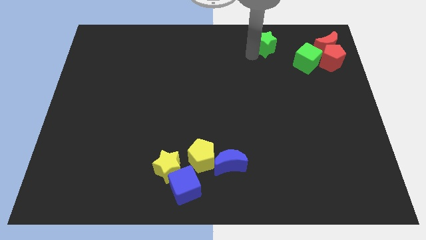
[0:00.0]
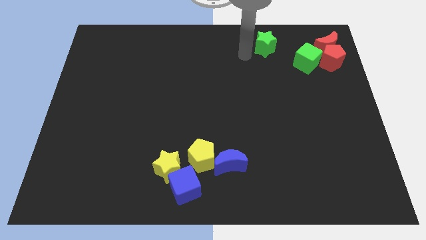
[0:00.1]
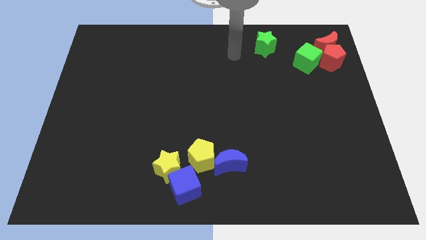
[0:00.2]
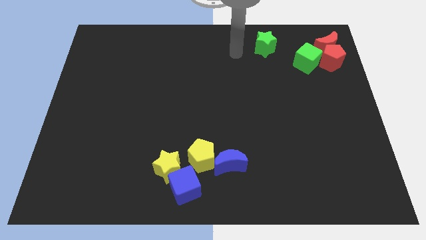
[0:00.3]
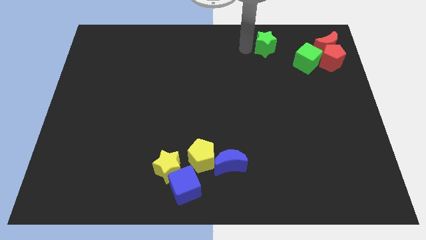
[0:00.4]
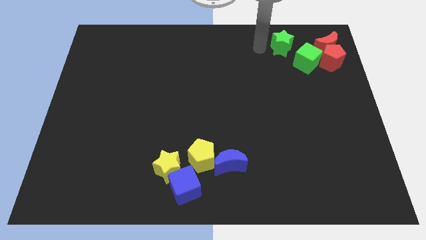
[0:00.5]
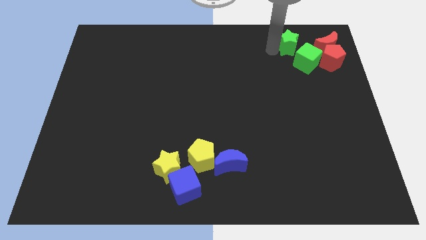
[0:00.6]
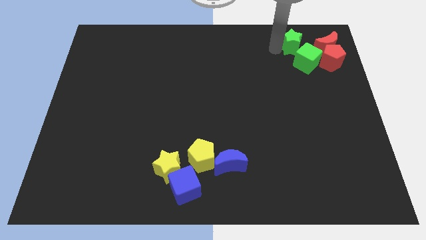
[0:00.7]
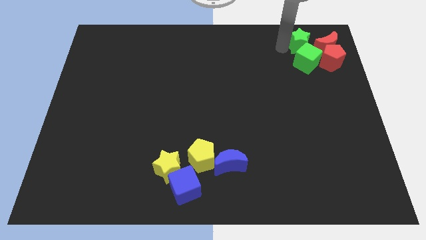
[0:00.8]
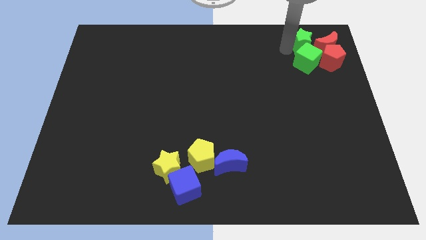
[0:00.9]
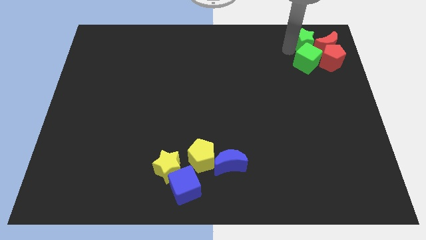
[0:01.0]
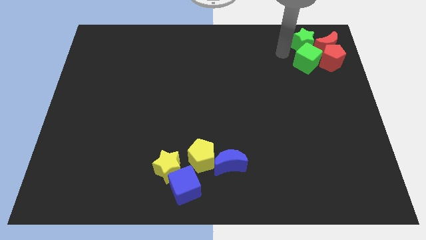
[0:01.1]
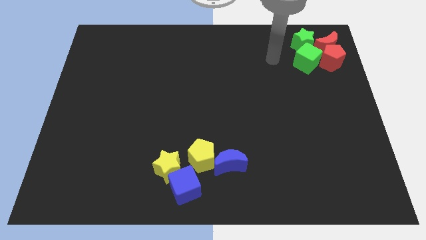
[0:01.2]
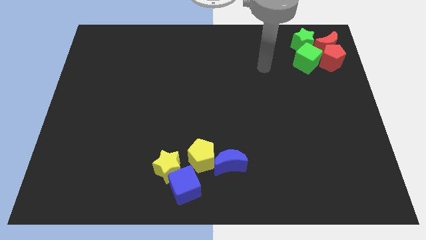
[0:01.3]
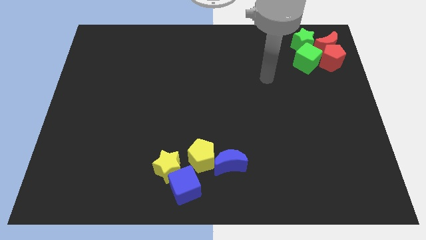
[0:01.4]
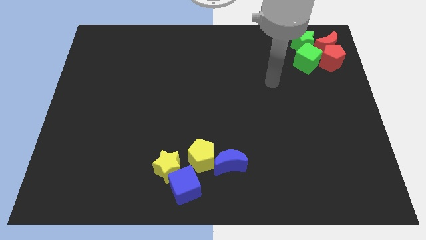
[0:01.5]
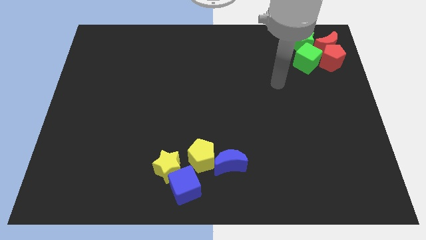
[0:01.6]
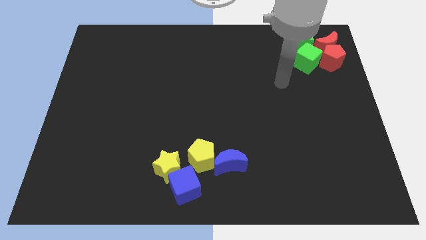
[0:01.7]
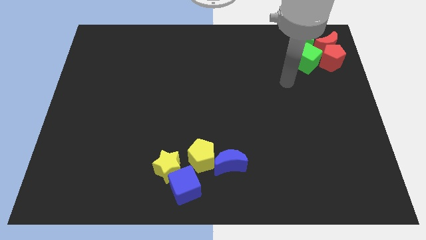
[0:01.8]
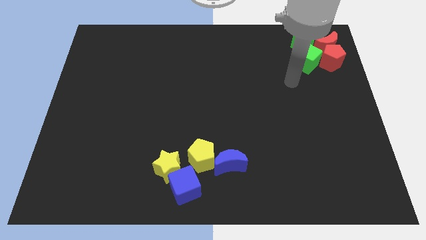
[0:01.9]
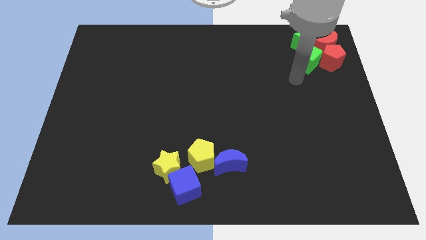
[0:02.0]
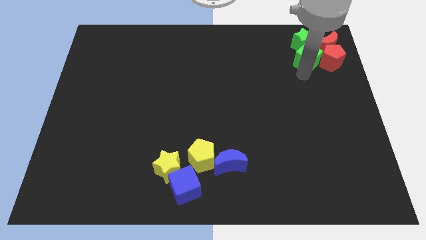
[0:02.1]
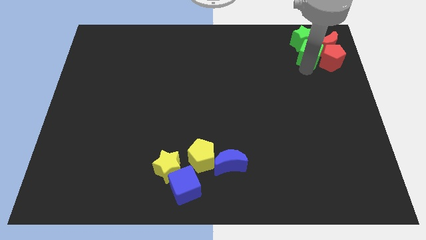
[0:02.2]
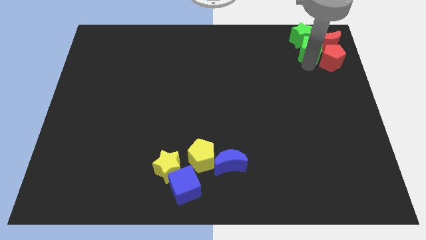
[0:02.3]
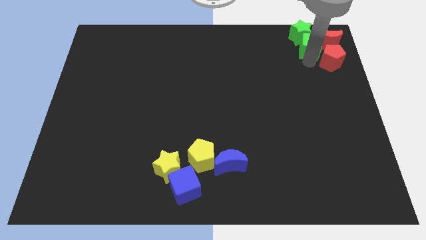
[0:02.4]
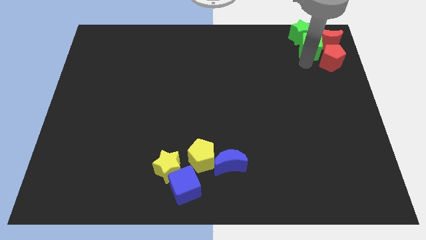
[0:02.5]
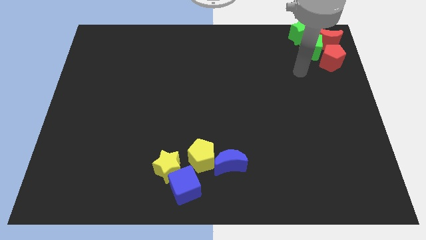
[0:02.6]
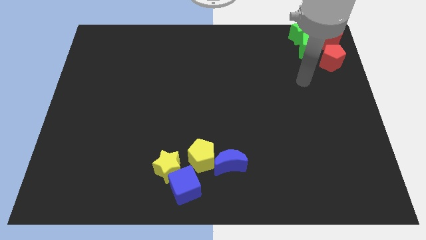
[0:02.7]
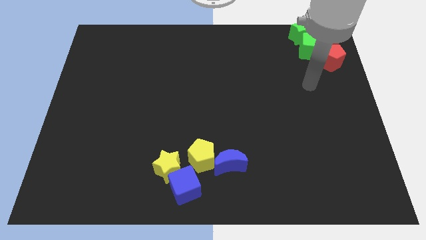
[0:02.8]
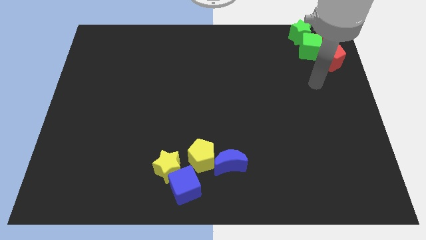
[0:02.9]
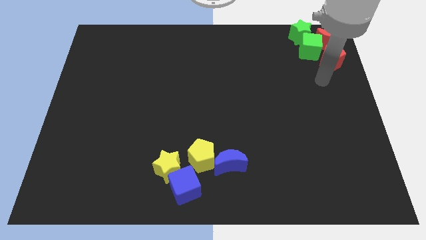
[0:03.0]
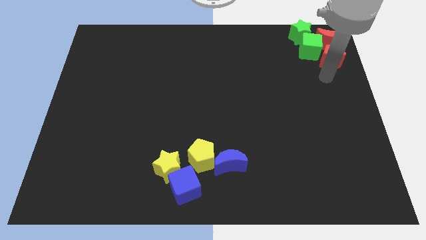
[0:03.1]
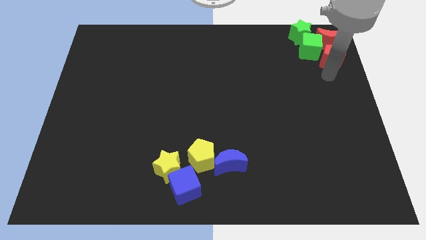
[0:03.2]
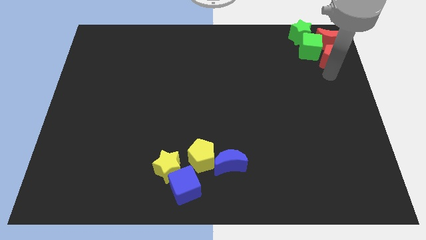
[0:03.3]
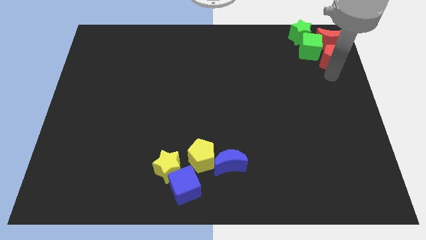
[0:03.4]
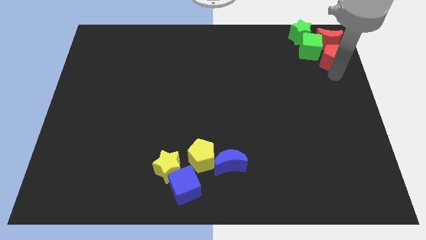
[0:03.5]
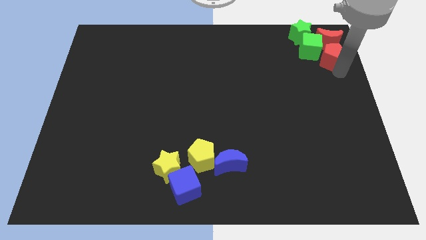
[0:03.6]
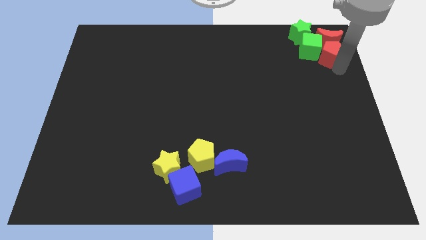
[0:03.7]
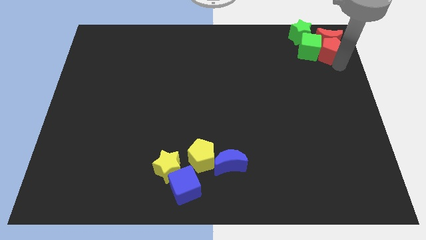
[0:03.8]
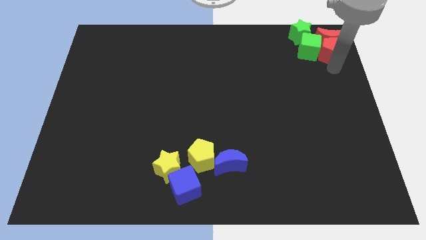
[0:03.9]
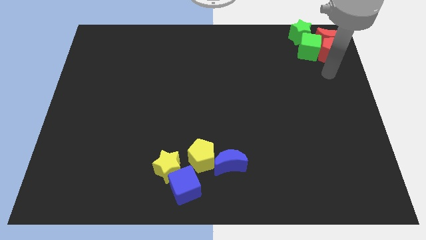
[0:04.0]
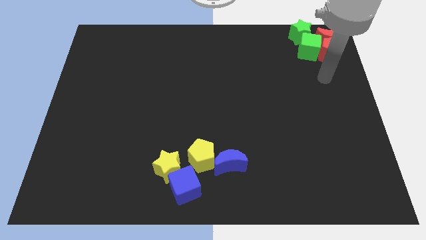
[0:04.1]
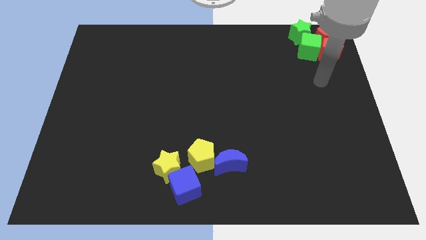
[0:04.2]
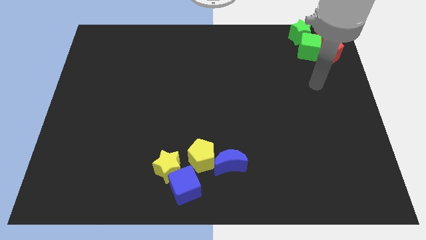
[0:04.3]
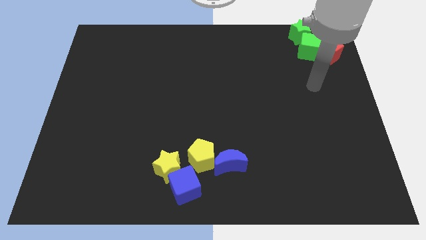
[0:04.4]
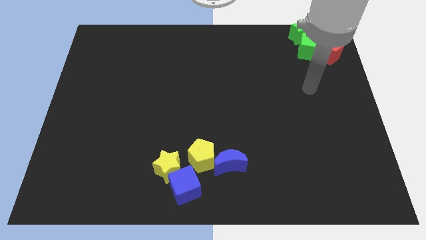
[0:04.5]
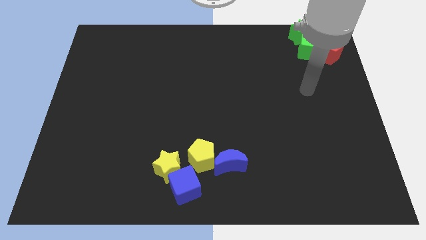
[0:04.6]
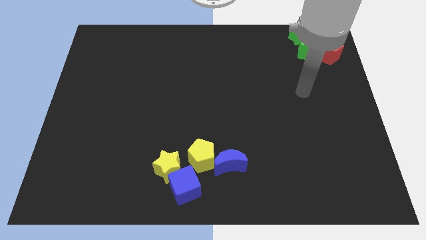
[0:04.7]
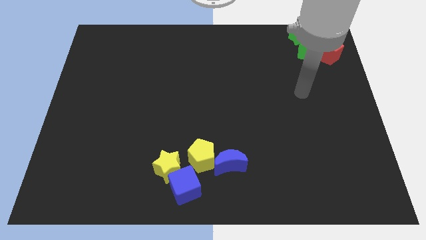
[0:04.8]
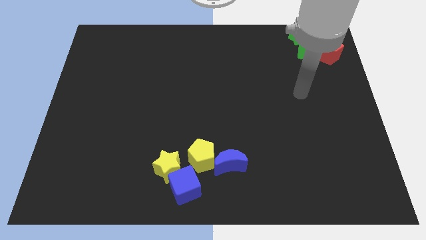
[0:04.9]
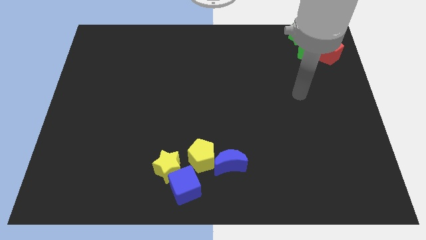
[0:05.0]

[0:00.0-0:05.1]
push a group of blocks to the top

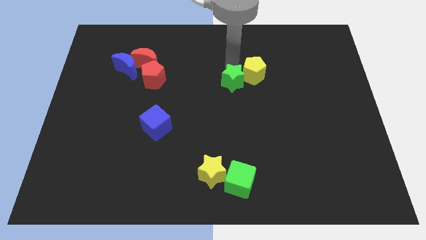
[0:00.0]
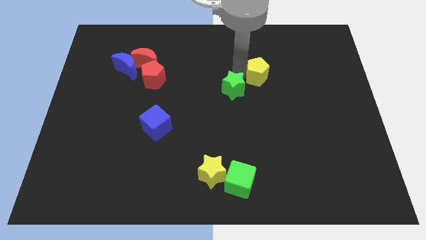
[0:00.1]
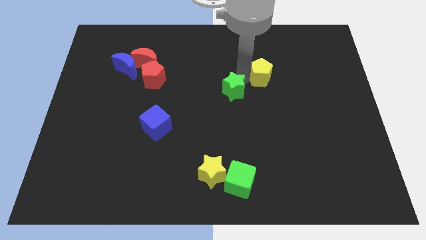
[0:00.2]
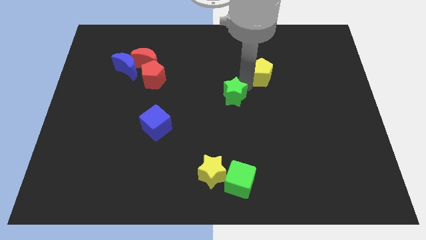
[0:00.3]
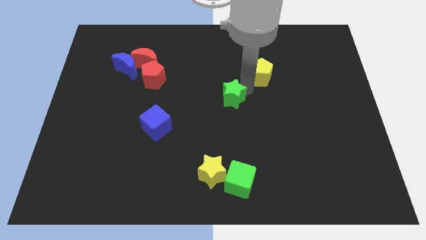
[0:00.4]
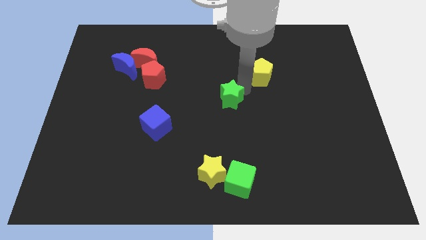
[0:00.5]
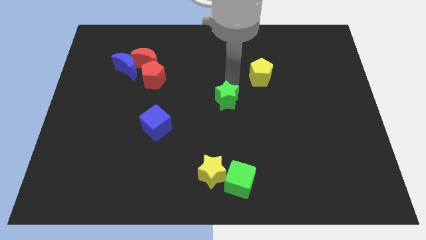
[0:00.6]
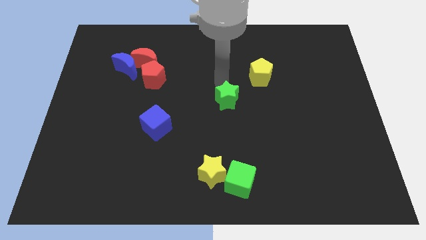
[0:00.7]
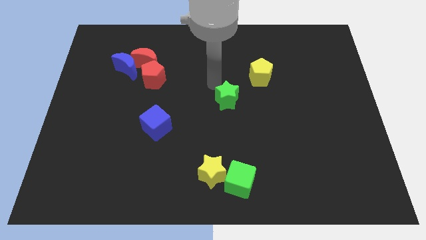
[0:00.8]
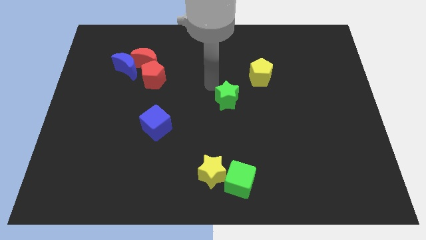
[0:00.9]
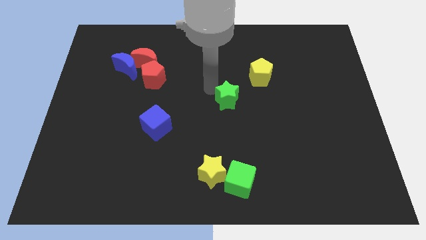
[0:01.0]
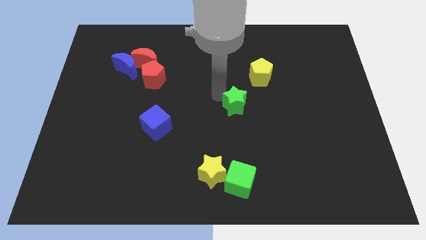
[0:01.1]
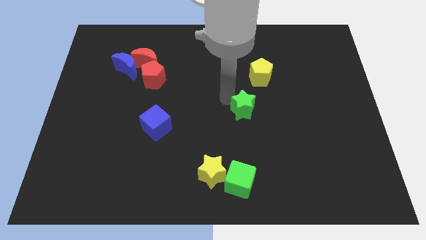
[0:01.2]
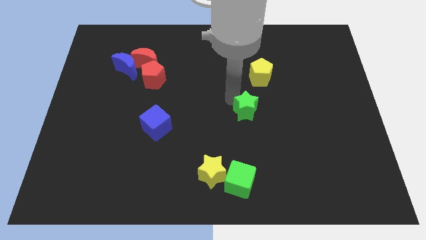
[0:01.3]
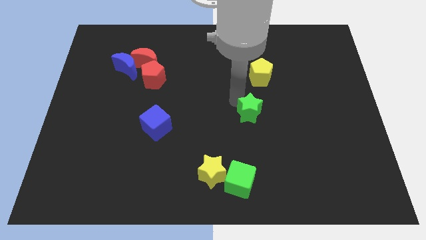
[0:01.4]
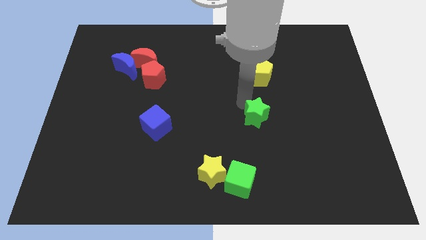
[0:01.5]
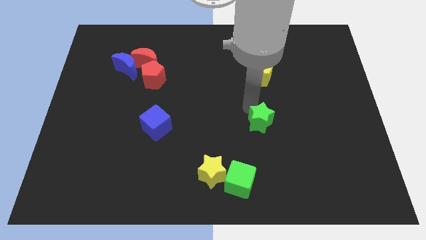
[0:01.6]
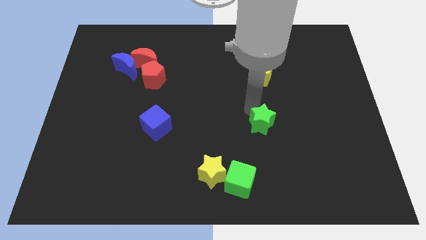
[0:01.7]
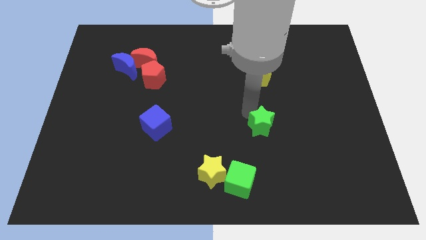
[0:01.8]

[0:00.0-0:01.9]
place green star below yellow pentagon

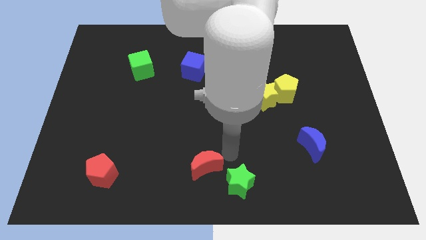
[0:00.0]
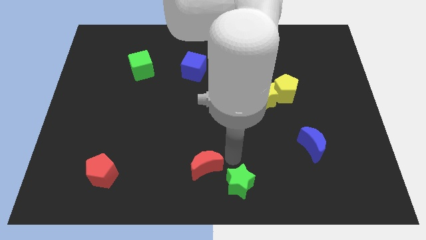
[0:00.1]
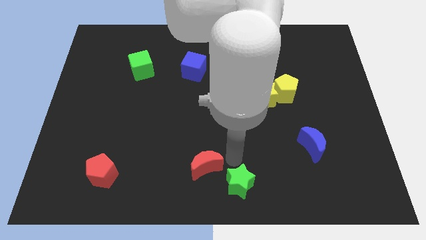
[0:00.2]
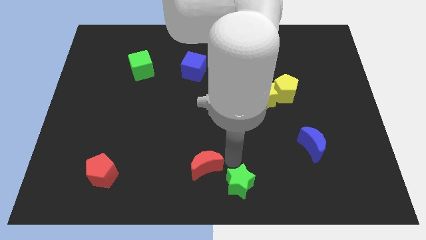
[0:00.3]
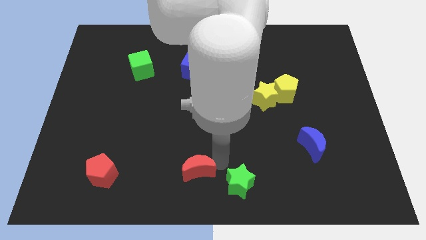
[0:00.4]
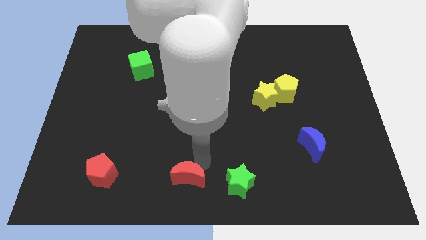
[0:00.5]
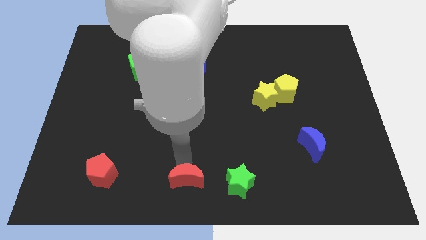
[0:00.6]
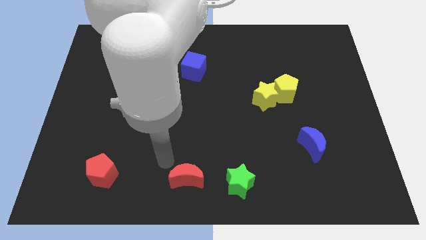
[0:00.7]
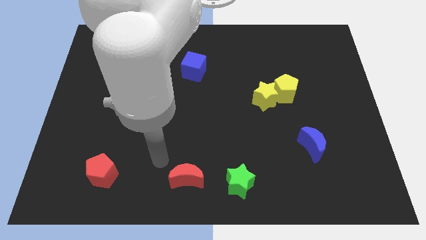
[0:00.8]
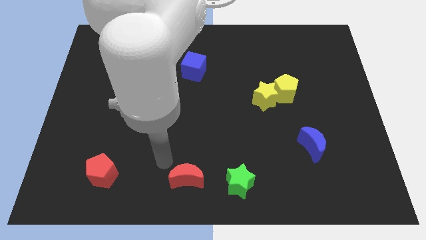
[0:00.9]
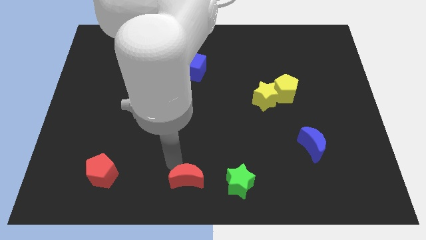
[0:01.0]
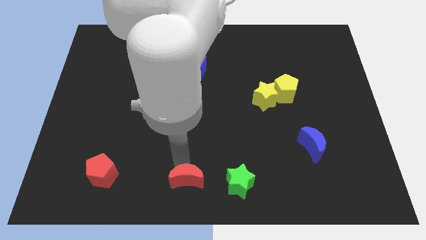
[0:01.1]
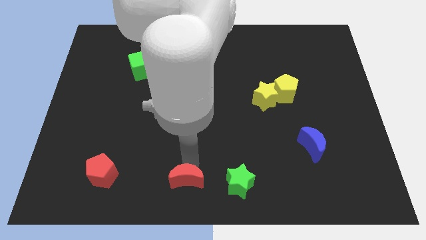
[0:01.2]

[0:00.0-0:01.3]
move the red moon to the left of the green star

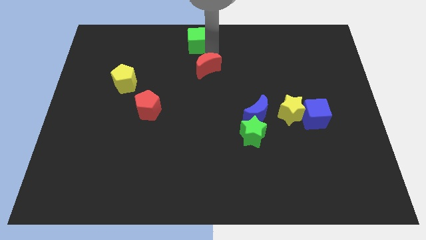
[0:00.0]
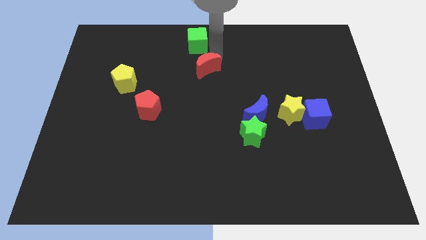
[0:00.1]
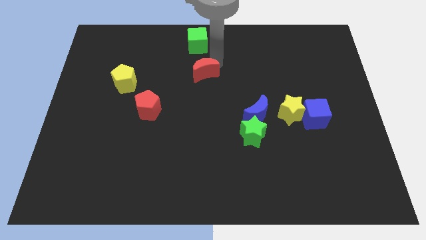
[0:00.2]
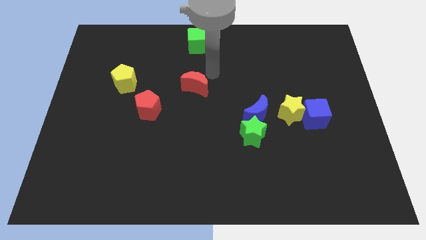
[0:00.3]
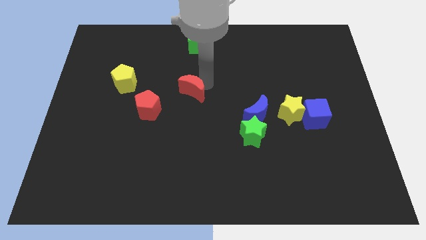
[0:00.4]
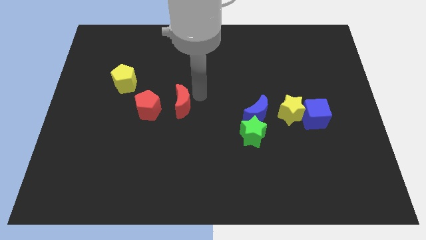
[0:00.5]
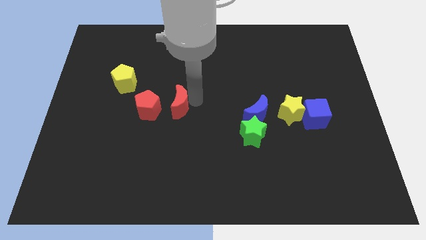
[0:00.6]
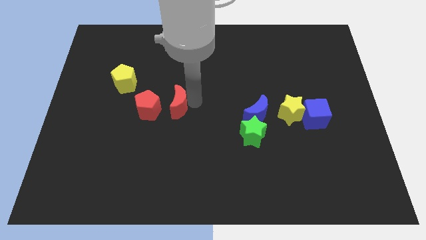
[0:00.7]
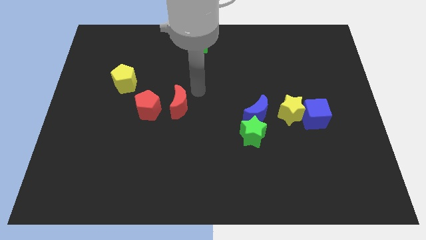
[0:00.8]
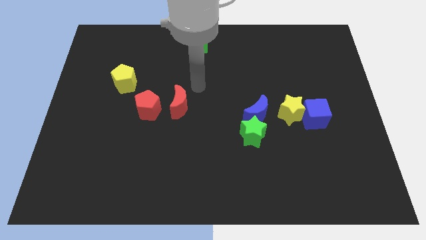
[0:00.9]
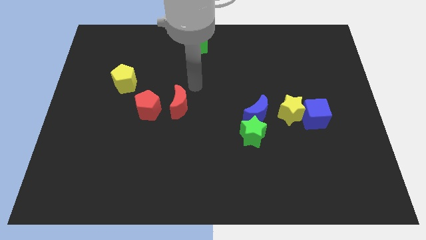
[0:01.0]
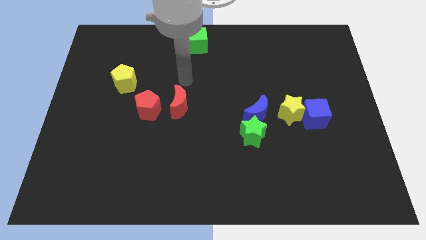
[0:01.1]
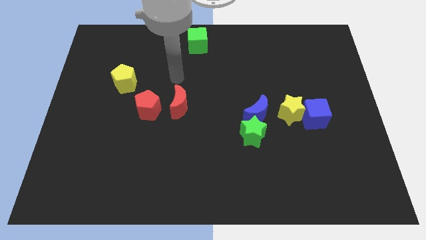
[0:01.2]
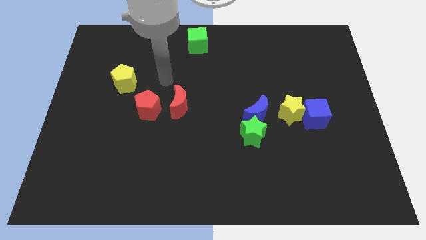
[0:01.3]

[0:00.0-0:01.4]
place the red crescent to right side of the red pentagon
